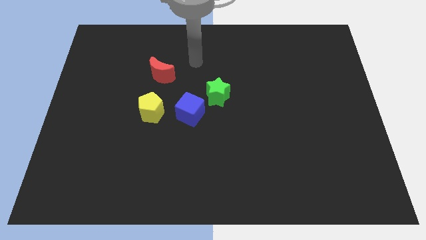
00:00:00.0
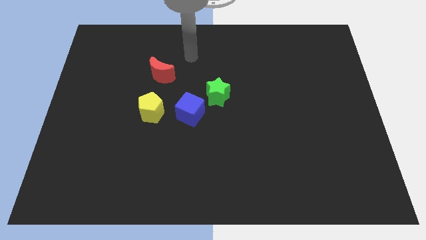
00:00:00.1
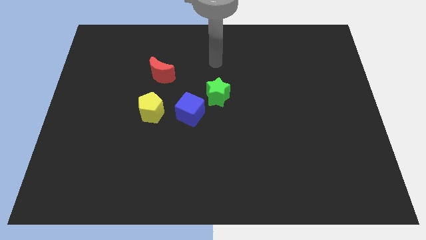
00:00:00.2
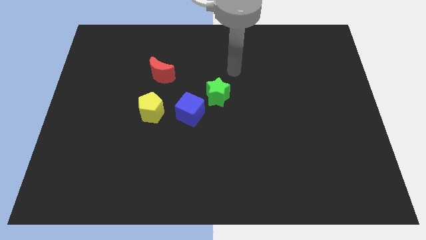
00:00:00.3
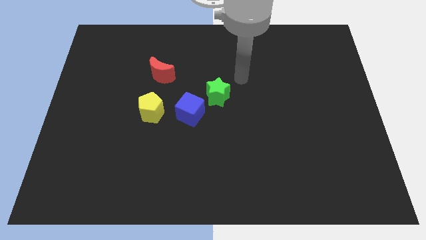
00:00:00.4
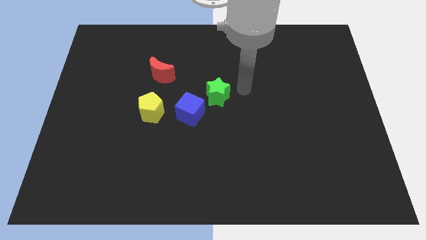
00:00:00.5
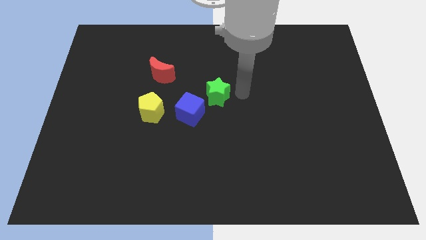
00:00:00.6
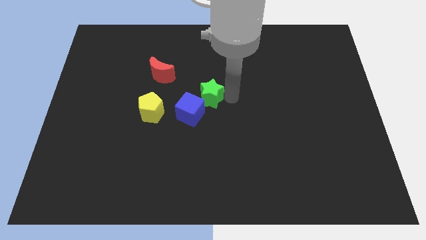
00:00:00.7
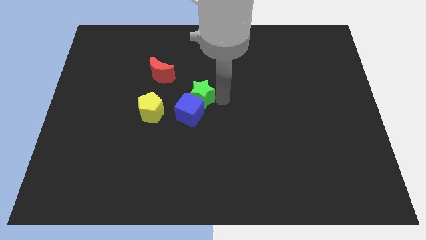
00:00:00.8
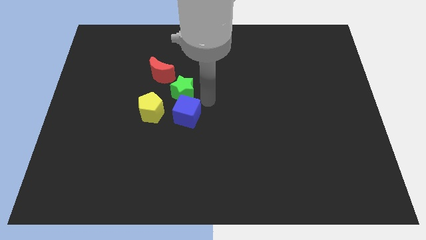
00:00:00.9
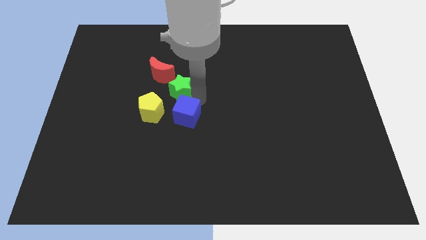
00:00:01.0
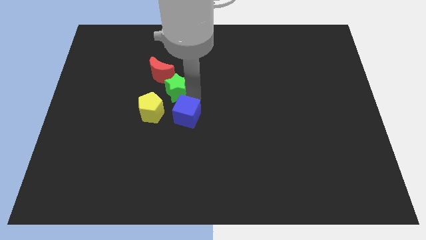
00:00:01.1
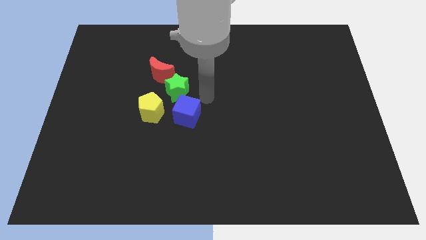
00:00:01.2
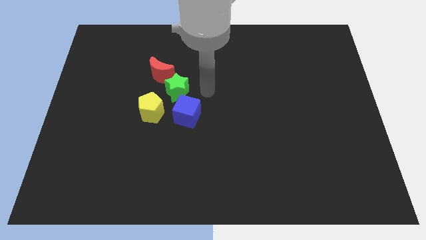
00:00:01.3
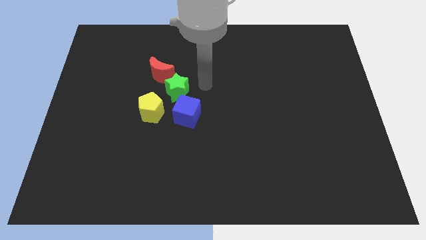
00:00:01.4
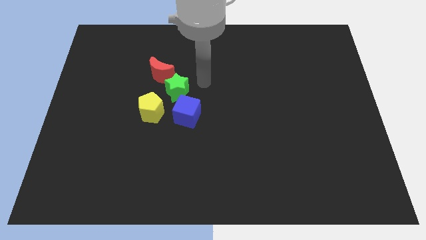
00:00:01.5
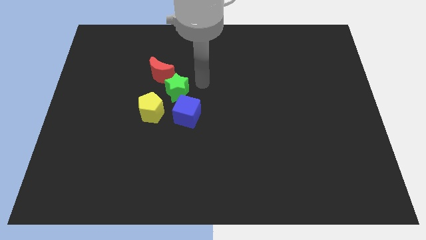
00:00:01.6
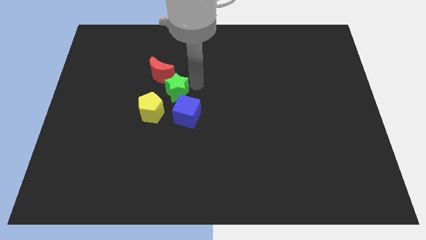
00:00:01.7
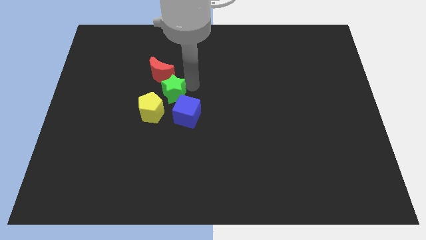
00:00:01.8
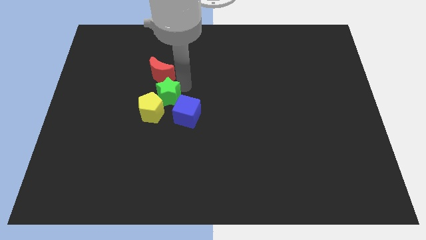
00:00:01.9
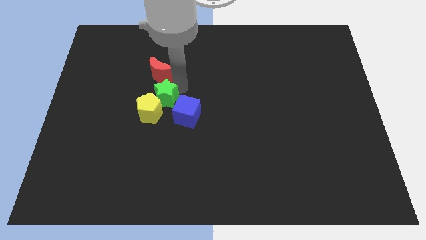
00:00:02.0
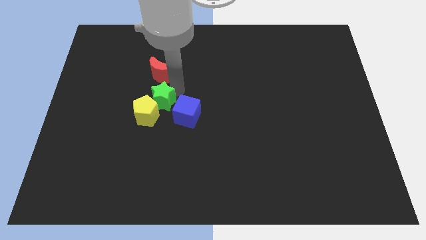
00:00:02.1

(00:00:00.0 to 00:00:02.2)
put the green block towards the pentagon

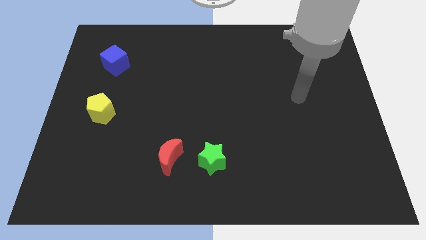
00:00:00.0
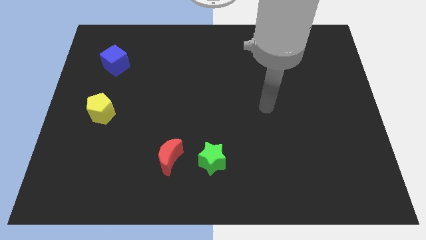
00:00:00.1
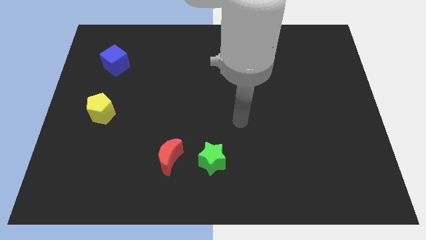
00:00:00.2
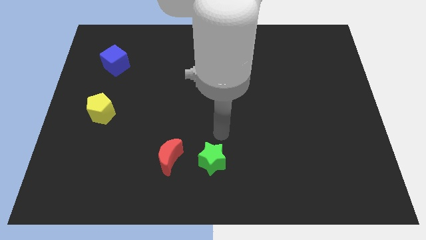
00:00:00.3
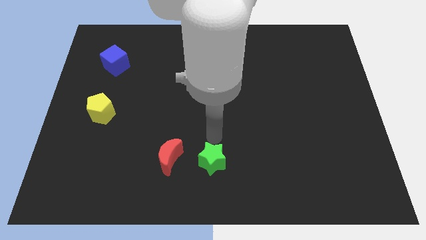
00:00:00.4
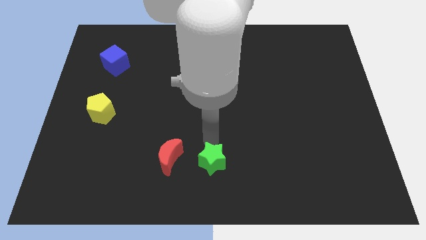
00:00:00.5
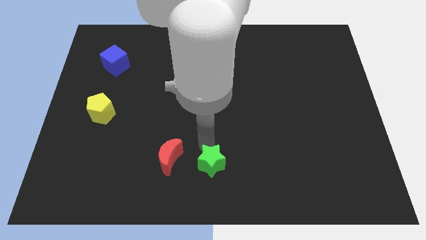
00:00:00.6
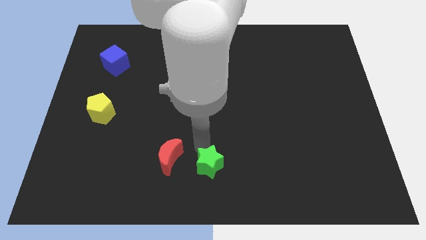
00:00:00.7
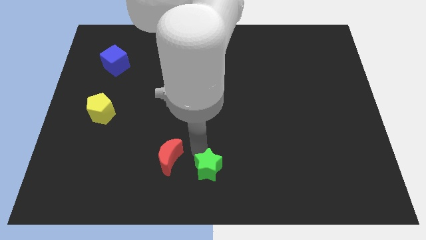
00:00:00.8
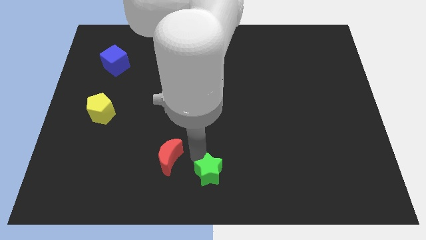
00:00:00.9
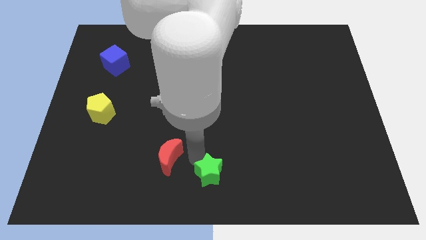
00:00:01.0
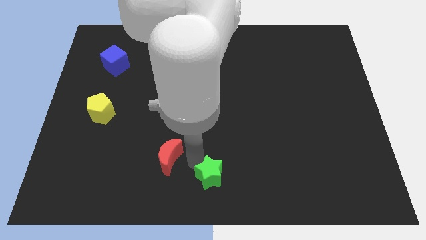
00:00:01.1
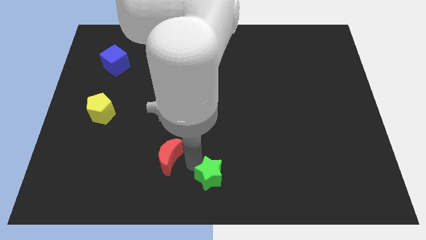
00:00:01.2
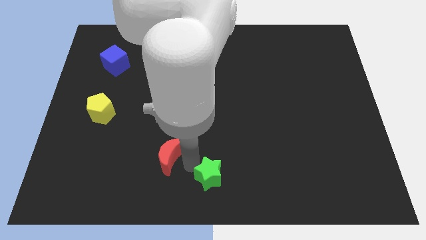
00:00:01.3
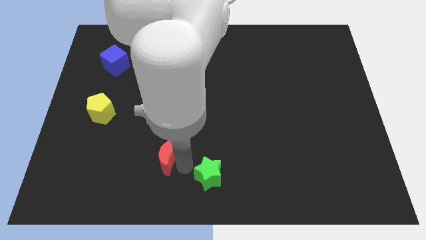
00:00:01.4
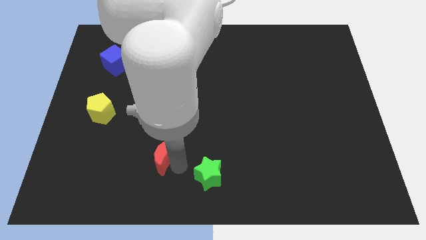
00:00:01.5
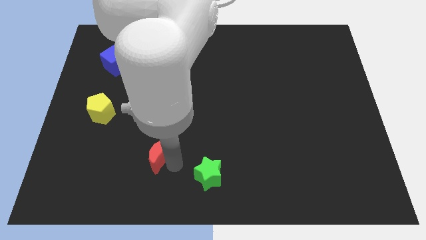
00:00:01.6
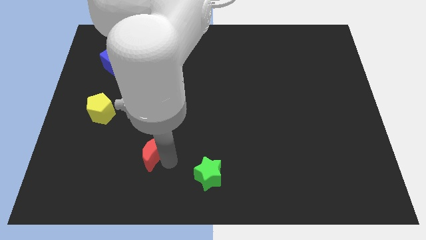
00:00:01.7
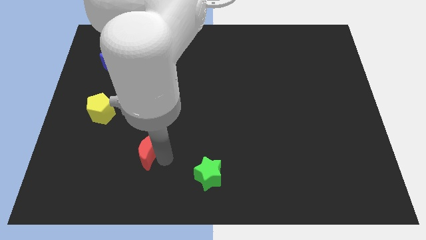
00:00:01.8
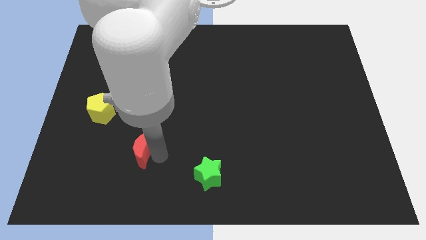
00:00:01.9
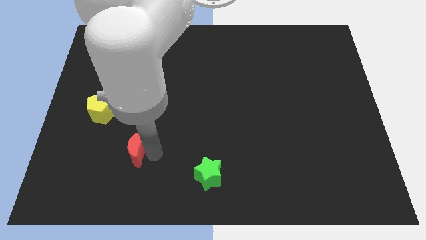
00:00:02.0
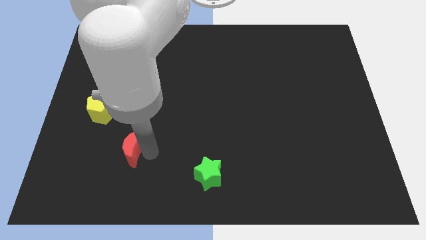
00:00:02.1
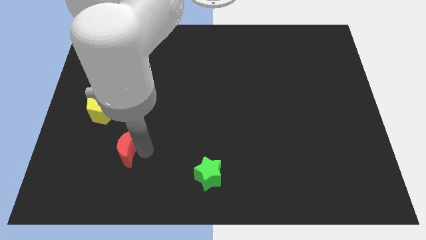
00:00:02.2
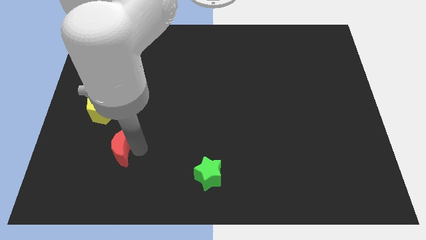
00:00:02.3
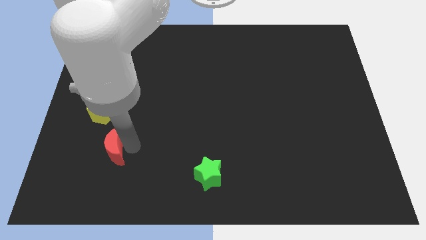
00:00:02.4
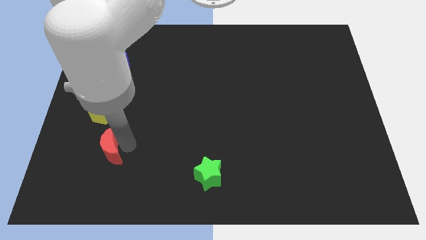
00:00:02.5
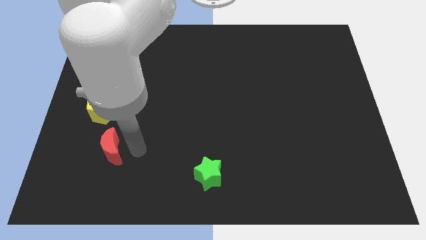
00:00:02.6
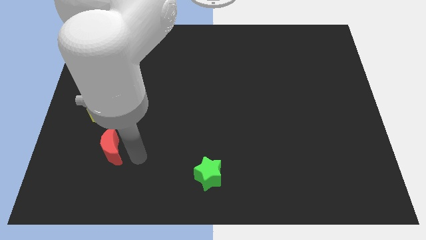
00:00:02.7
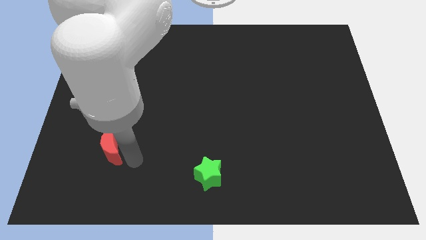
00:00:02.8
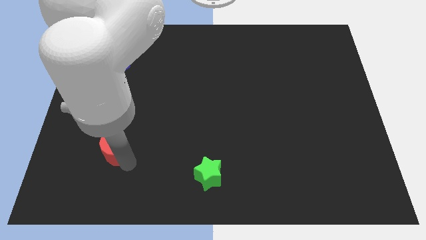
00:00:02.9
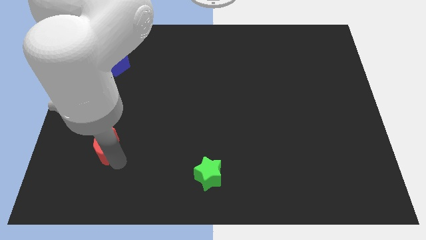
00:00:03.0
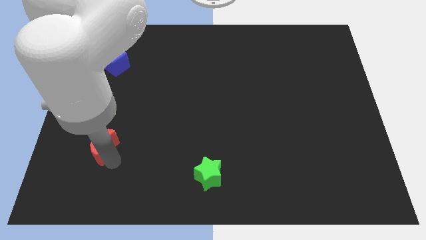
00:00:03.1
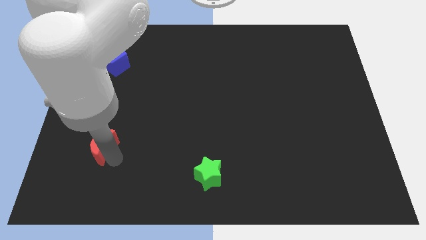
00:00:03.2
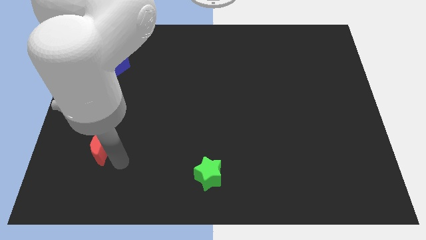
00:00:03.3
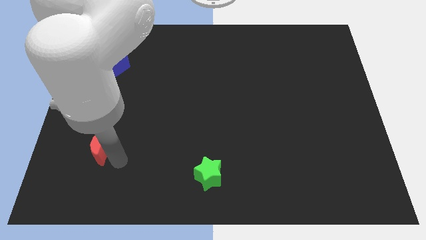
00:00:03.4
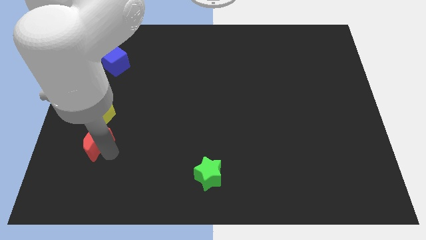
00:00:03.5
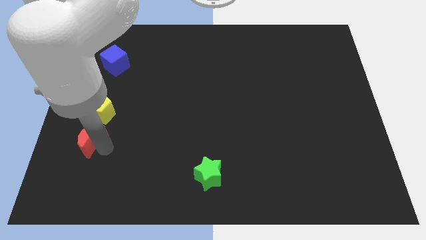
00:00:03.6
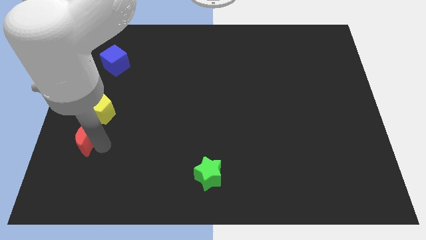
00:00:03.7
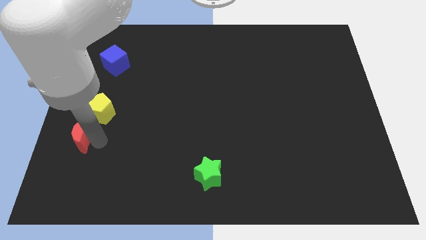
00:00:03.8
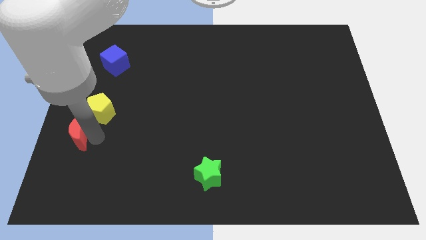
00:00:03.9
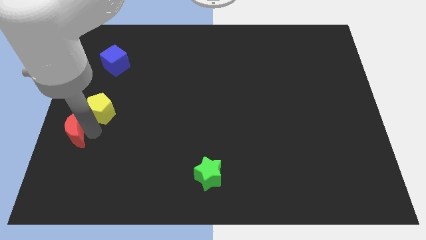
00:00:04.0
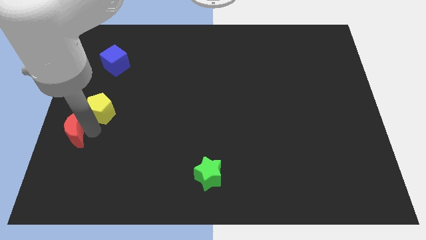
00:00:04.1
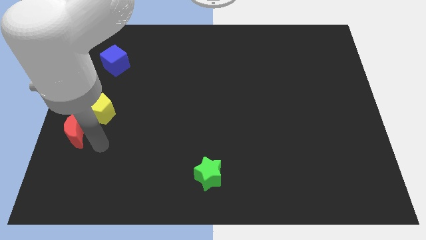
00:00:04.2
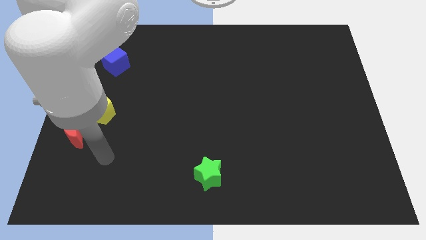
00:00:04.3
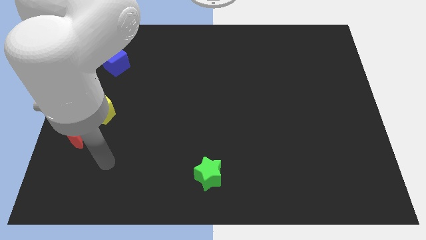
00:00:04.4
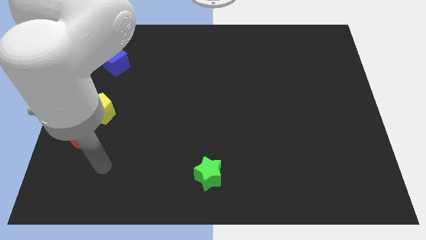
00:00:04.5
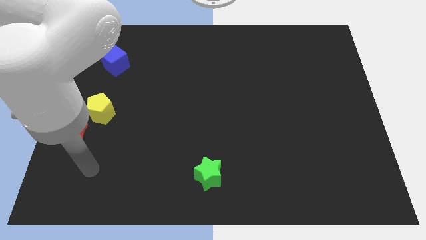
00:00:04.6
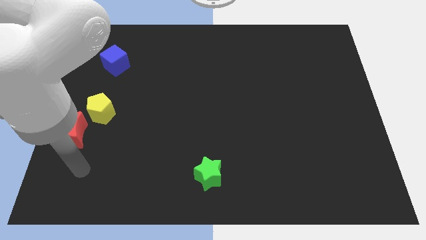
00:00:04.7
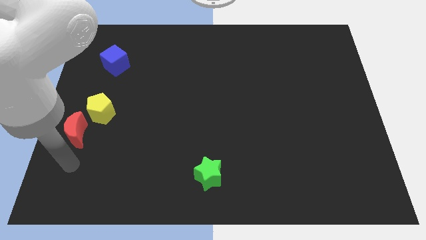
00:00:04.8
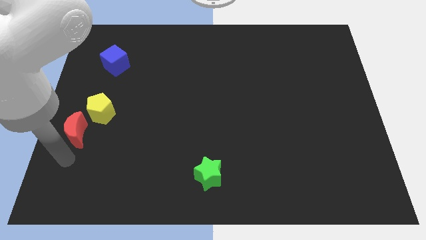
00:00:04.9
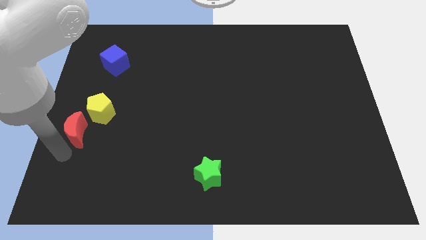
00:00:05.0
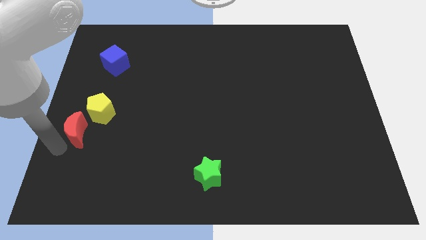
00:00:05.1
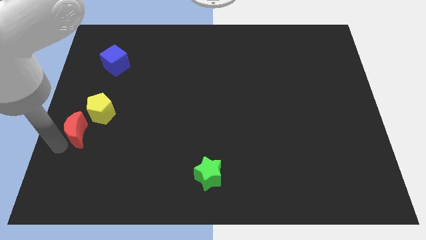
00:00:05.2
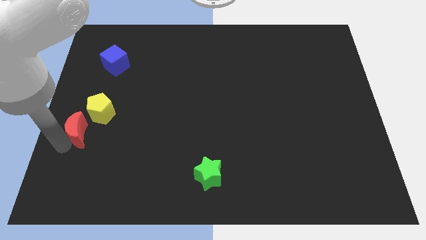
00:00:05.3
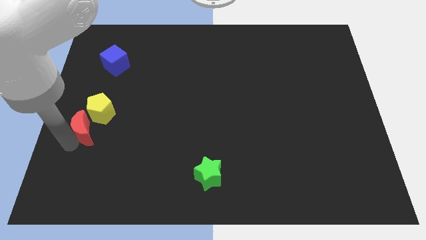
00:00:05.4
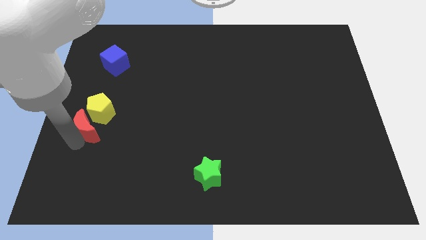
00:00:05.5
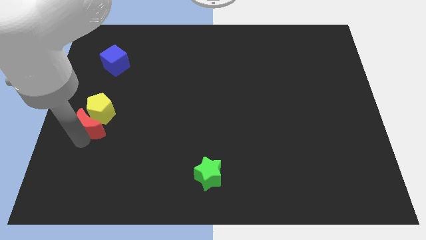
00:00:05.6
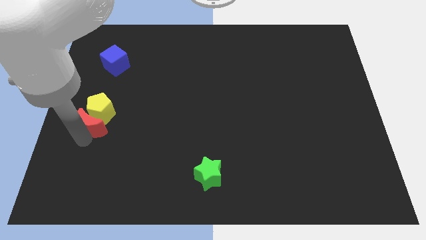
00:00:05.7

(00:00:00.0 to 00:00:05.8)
move the red moon next to the pentagon

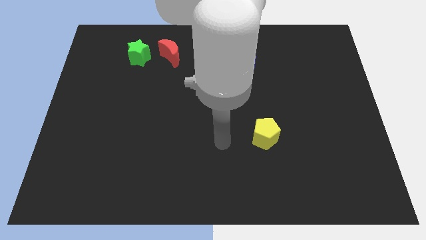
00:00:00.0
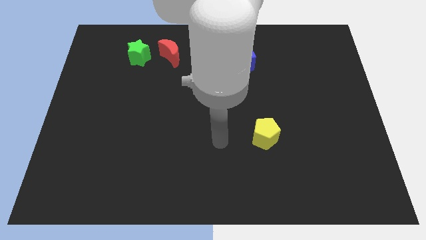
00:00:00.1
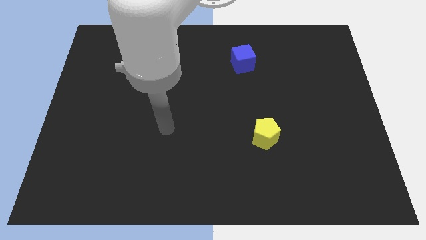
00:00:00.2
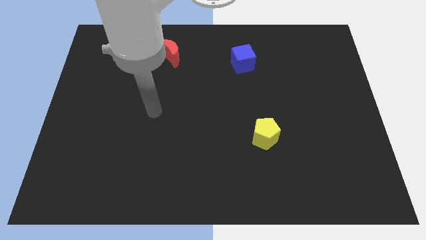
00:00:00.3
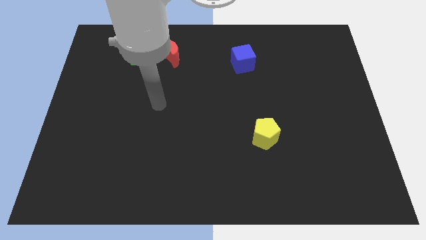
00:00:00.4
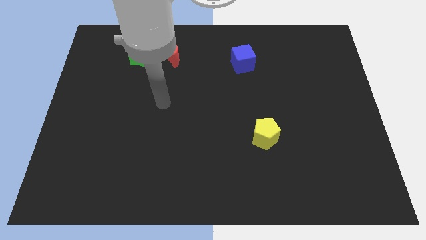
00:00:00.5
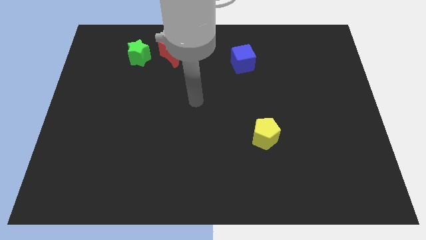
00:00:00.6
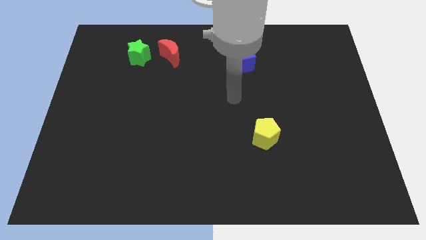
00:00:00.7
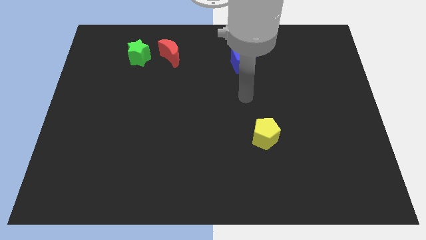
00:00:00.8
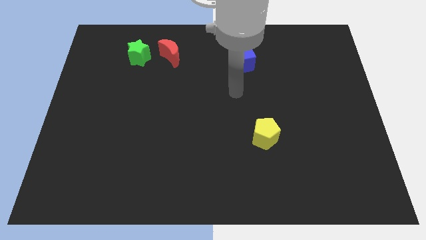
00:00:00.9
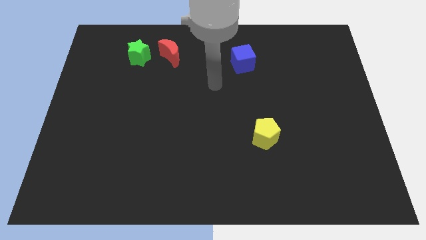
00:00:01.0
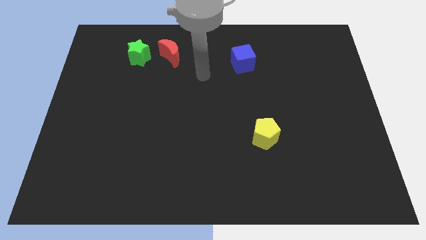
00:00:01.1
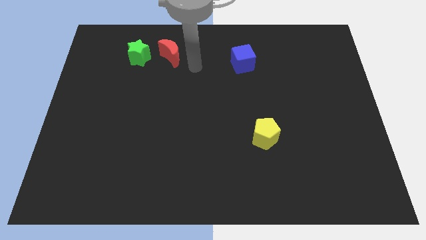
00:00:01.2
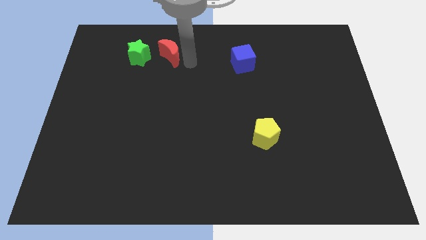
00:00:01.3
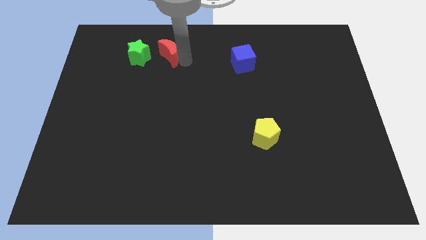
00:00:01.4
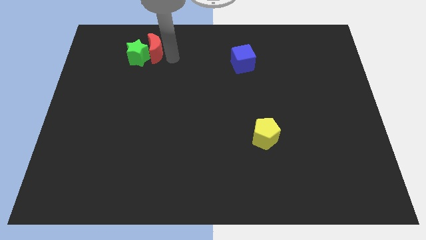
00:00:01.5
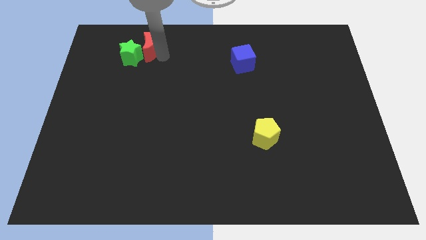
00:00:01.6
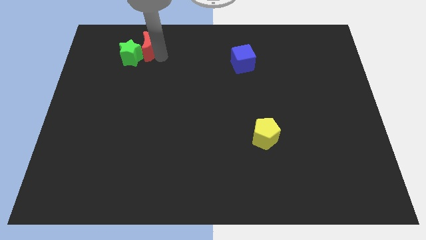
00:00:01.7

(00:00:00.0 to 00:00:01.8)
slide the moon towards the star
